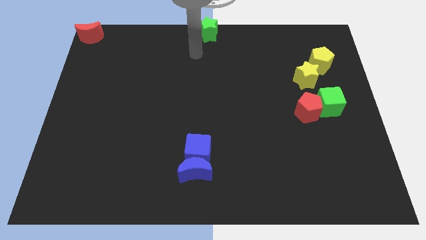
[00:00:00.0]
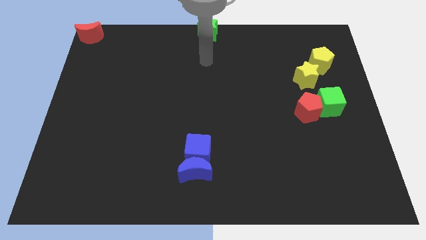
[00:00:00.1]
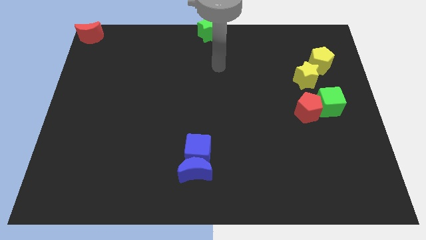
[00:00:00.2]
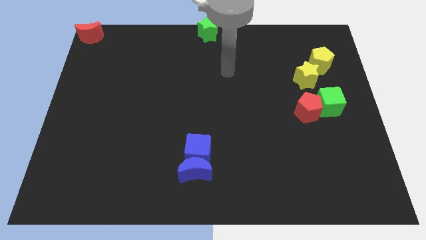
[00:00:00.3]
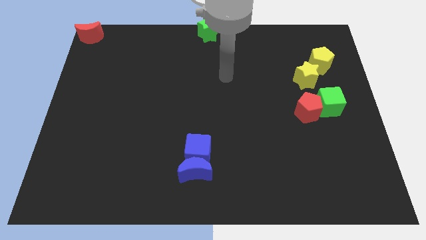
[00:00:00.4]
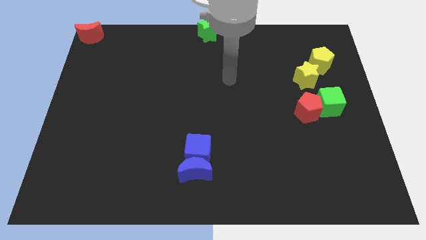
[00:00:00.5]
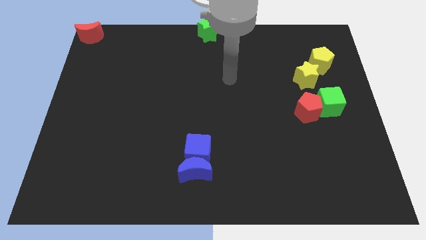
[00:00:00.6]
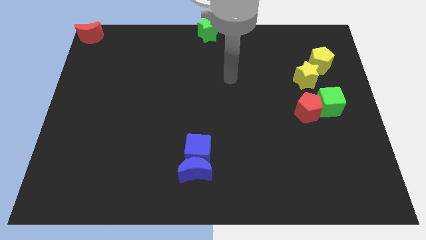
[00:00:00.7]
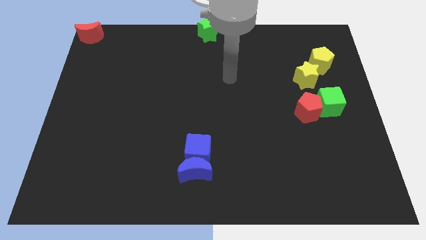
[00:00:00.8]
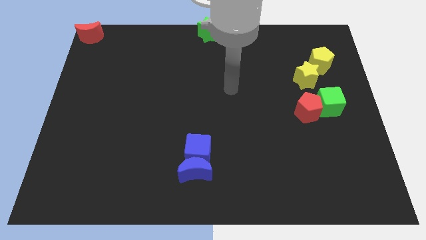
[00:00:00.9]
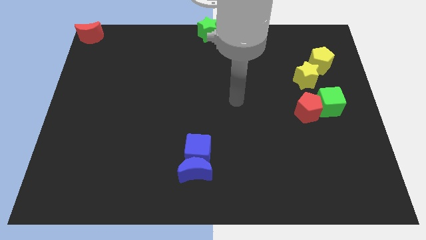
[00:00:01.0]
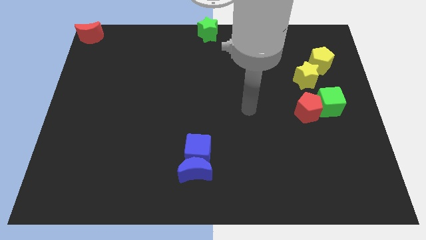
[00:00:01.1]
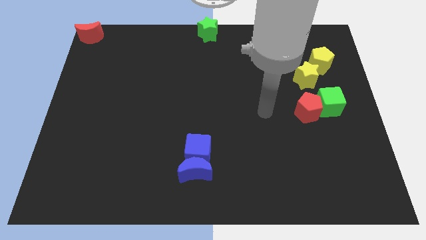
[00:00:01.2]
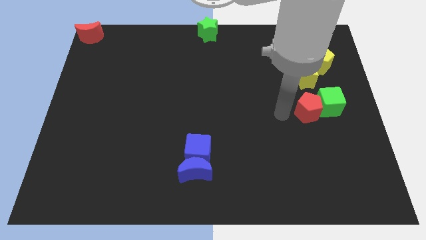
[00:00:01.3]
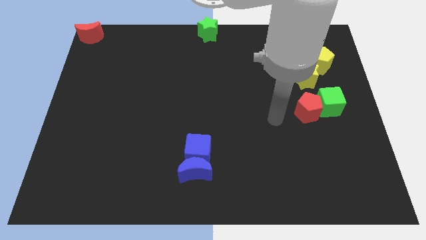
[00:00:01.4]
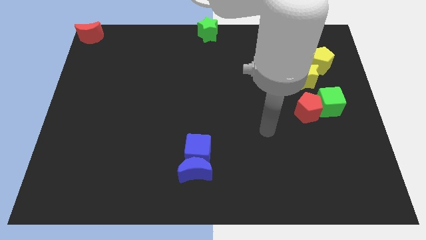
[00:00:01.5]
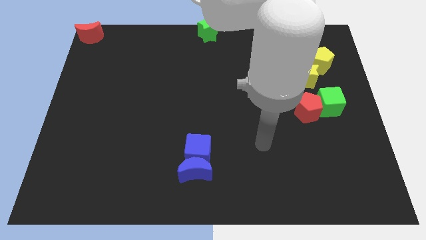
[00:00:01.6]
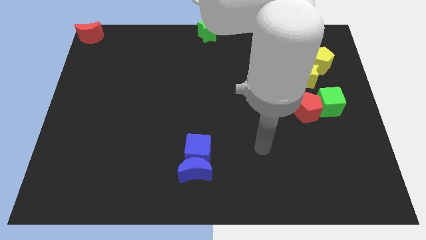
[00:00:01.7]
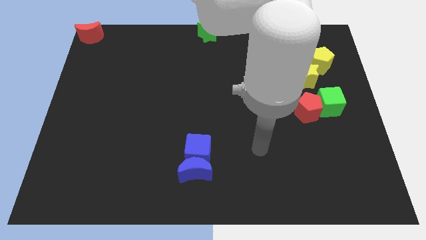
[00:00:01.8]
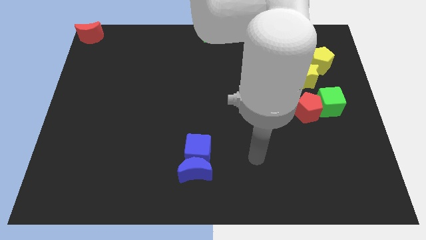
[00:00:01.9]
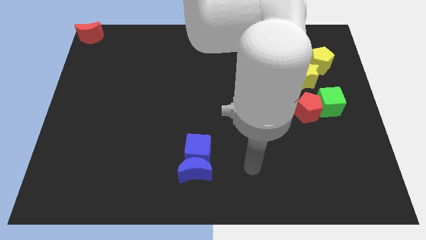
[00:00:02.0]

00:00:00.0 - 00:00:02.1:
move your hand towards the right side of the blue blocks

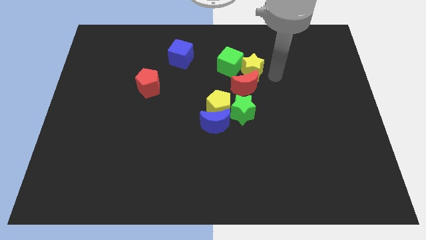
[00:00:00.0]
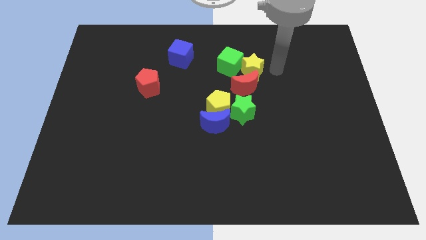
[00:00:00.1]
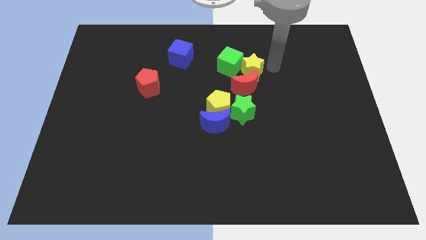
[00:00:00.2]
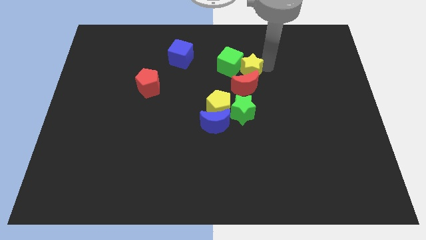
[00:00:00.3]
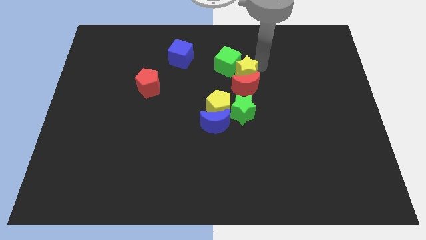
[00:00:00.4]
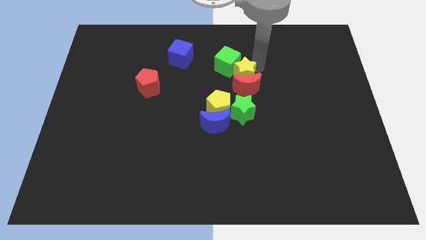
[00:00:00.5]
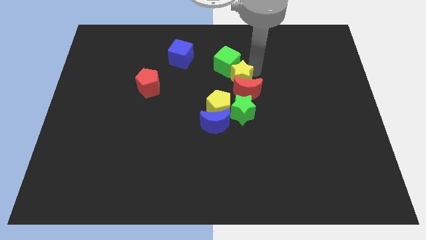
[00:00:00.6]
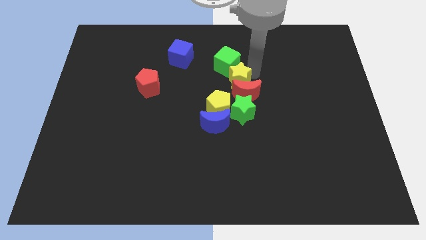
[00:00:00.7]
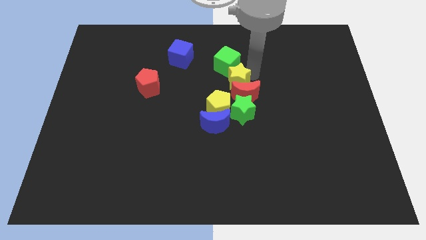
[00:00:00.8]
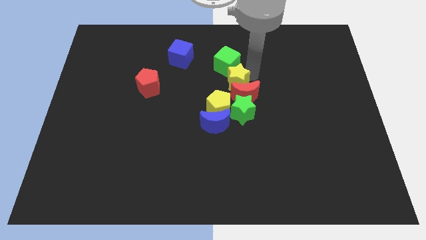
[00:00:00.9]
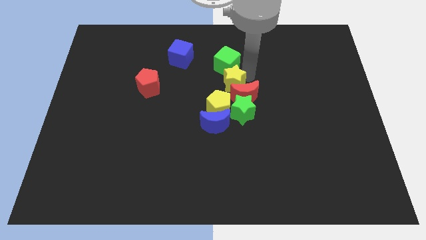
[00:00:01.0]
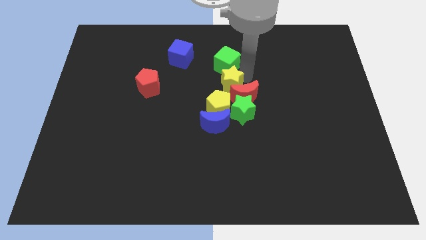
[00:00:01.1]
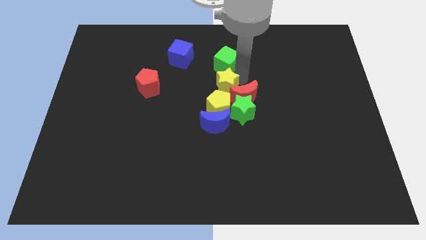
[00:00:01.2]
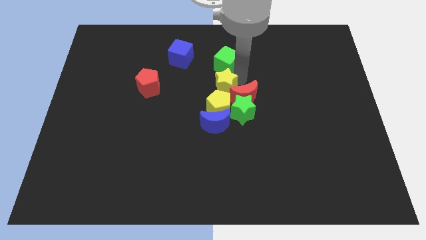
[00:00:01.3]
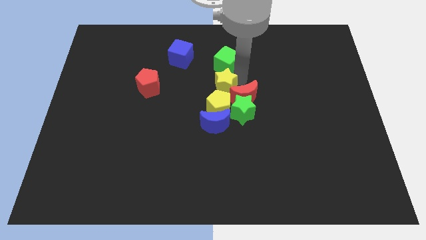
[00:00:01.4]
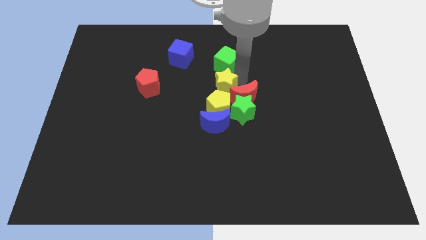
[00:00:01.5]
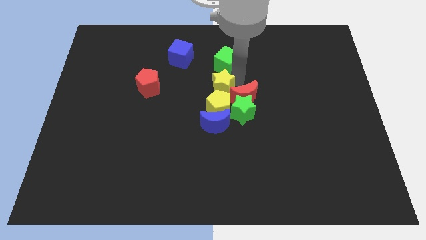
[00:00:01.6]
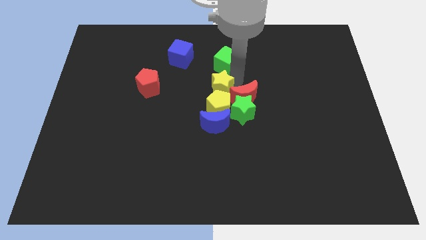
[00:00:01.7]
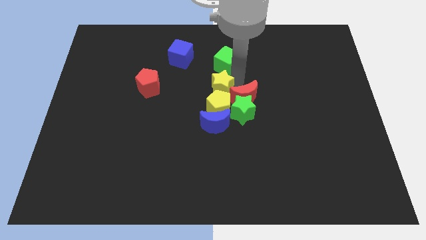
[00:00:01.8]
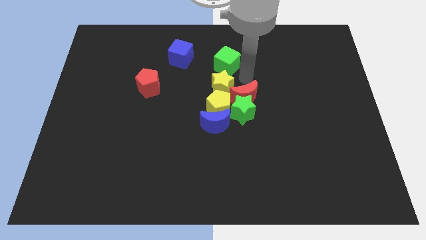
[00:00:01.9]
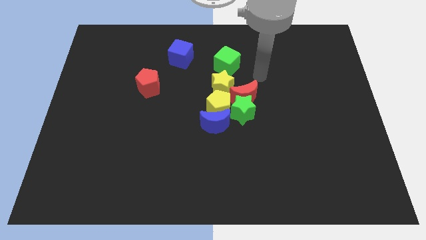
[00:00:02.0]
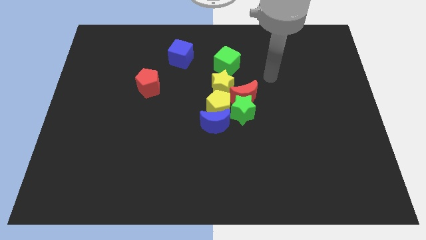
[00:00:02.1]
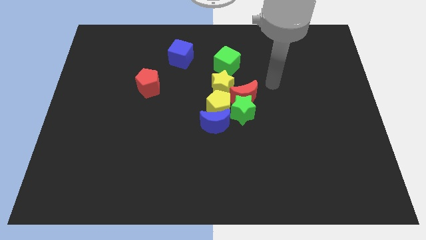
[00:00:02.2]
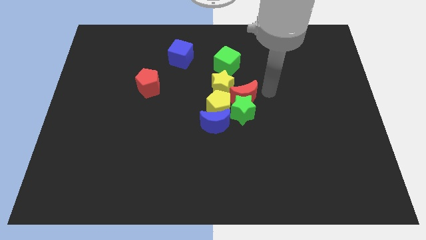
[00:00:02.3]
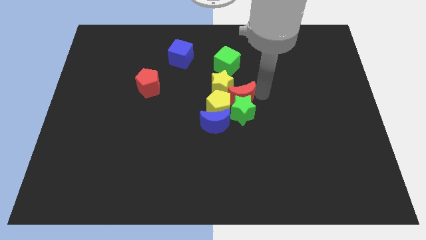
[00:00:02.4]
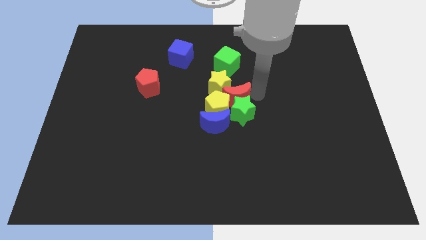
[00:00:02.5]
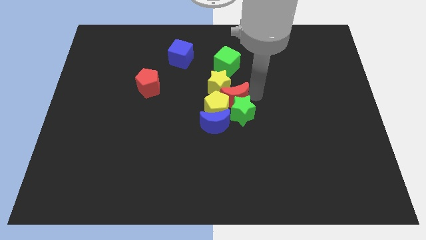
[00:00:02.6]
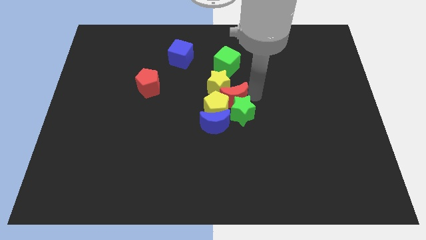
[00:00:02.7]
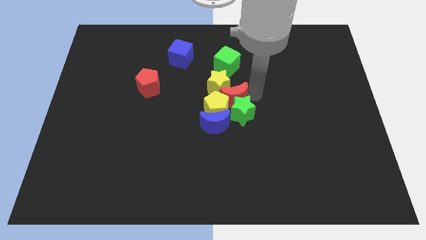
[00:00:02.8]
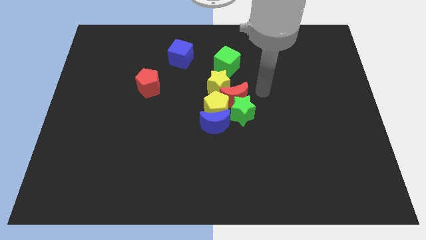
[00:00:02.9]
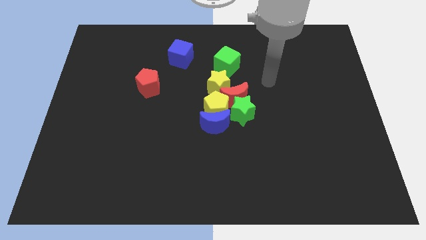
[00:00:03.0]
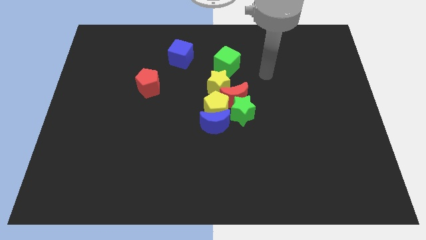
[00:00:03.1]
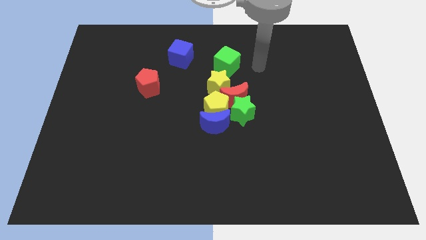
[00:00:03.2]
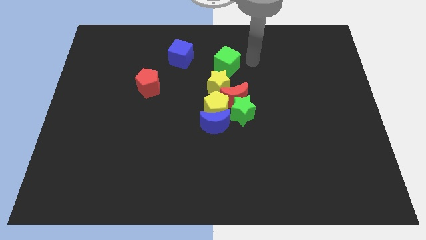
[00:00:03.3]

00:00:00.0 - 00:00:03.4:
move yellow star to the top of yellow pentagon

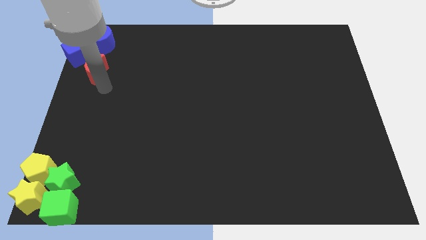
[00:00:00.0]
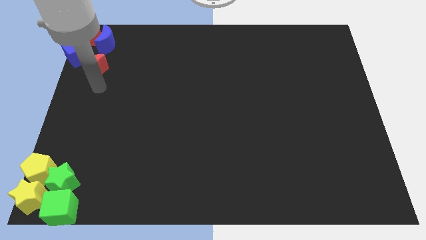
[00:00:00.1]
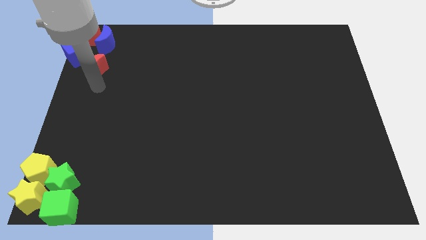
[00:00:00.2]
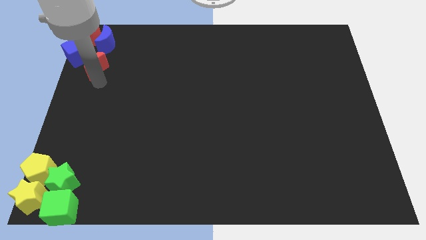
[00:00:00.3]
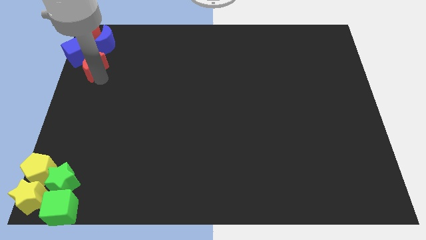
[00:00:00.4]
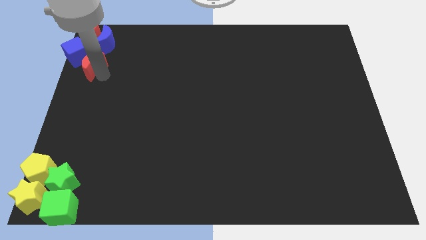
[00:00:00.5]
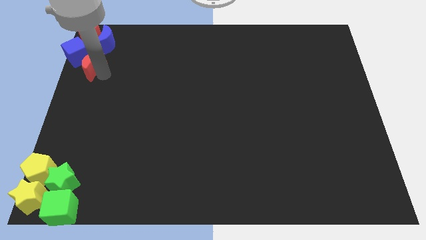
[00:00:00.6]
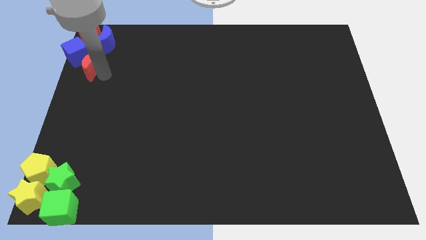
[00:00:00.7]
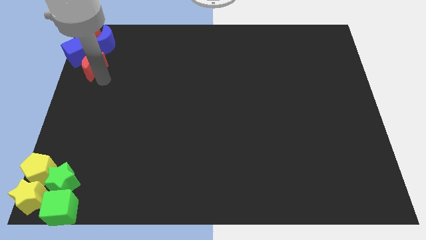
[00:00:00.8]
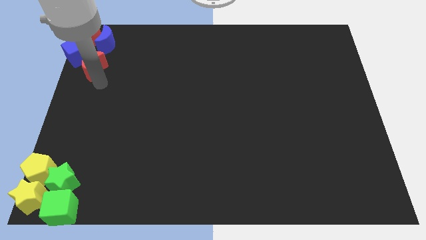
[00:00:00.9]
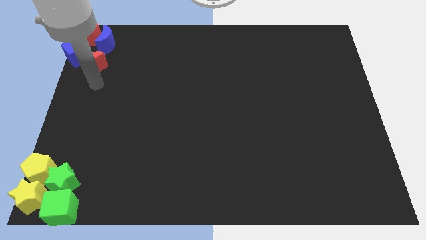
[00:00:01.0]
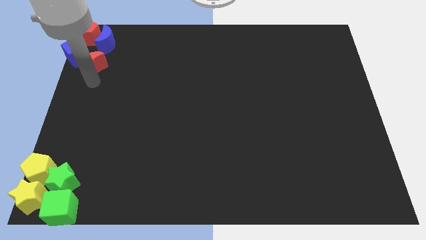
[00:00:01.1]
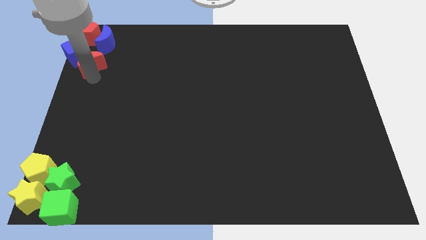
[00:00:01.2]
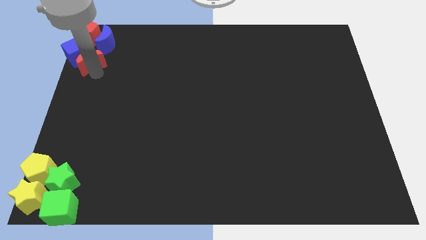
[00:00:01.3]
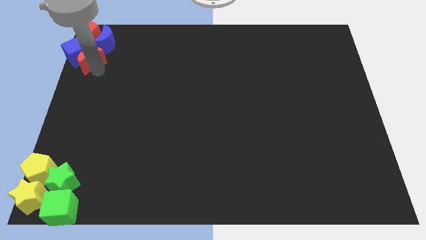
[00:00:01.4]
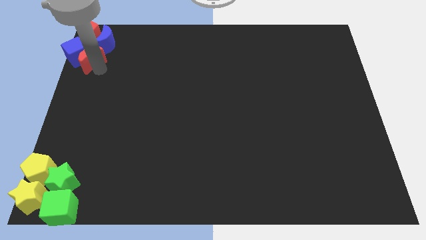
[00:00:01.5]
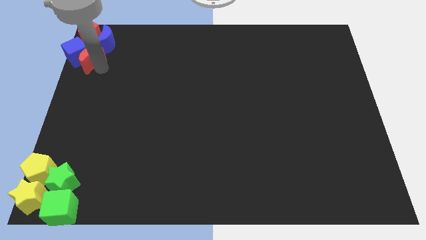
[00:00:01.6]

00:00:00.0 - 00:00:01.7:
push the red moon into the blue cube

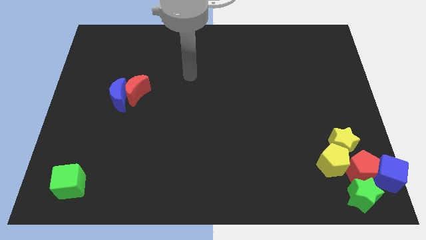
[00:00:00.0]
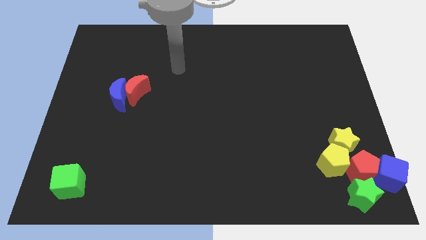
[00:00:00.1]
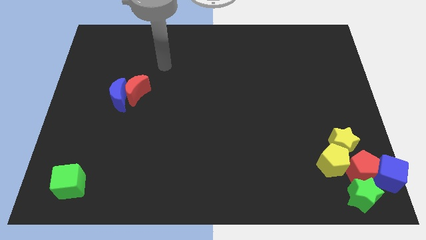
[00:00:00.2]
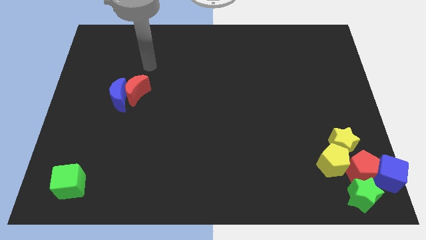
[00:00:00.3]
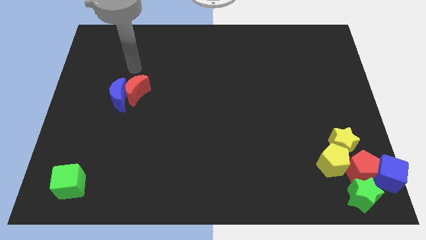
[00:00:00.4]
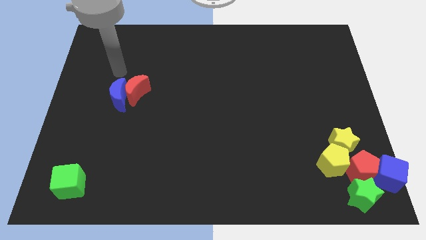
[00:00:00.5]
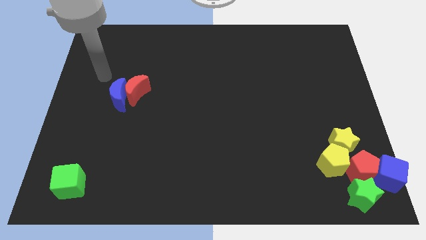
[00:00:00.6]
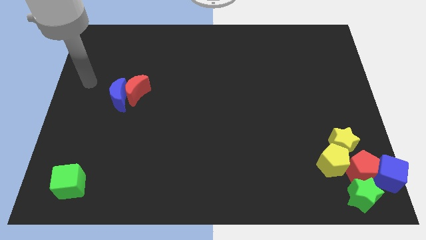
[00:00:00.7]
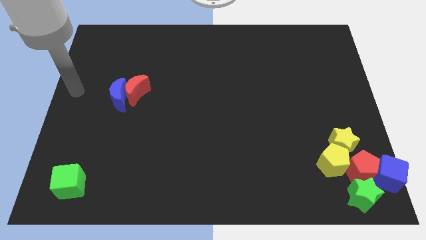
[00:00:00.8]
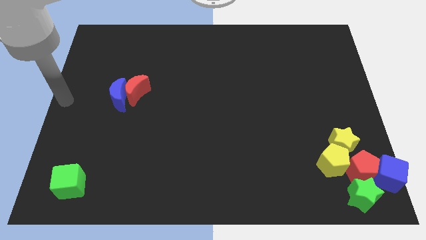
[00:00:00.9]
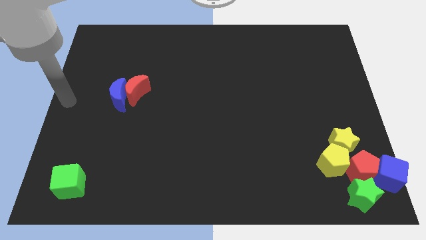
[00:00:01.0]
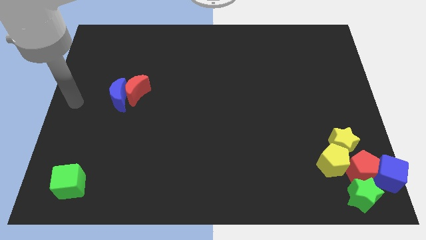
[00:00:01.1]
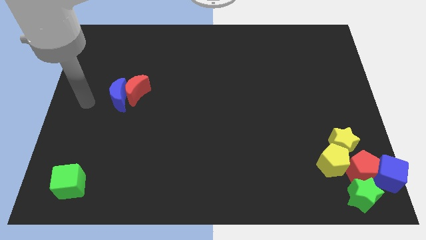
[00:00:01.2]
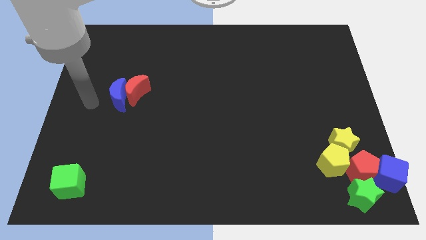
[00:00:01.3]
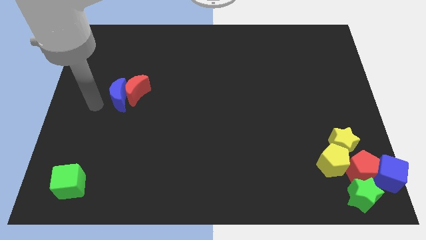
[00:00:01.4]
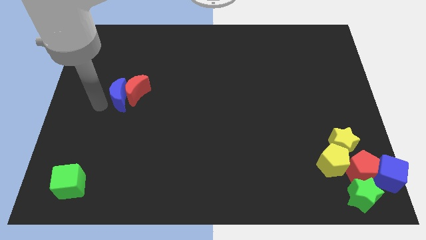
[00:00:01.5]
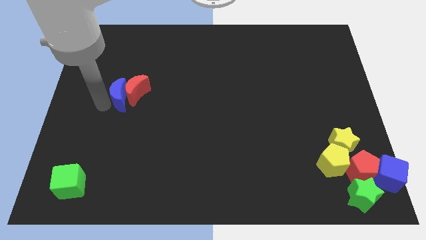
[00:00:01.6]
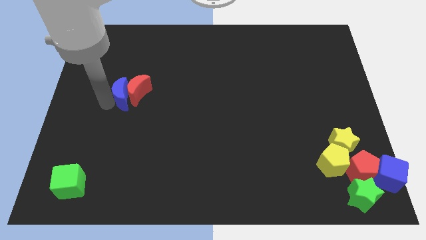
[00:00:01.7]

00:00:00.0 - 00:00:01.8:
place your arm left to the blue moon
